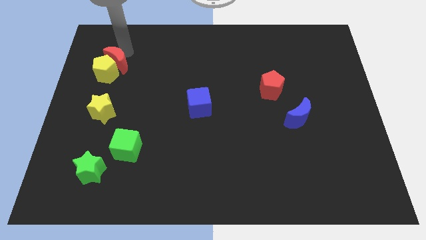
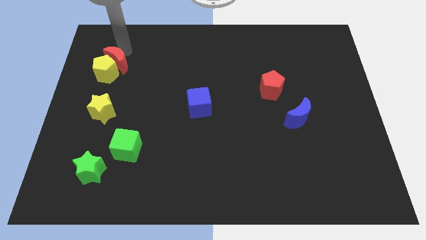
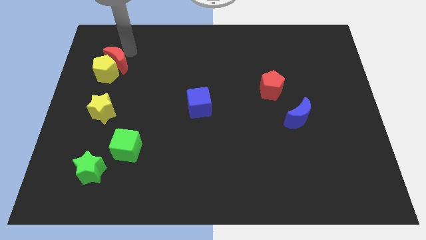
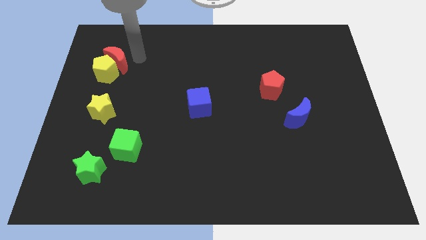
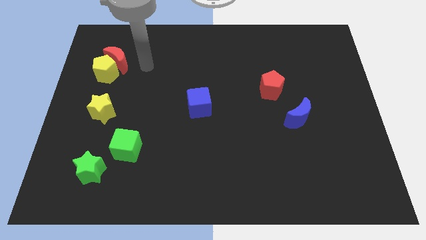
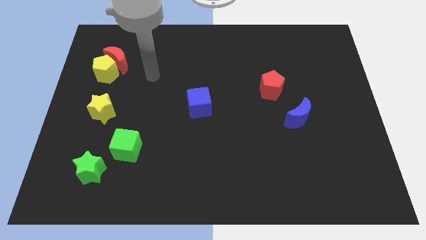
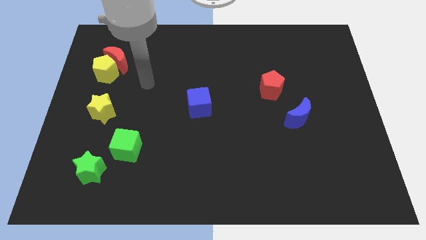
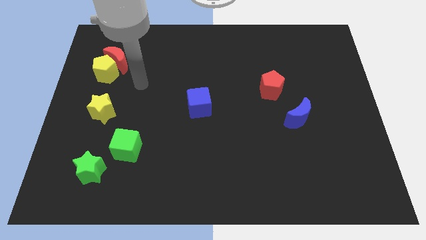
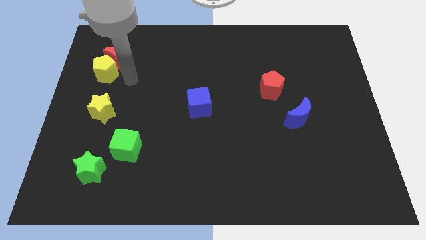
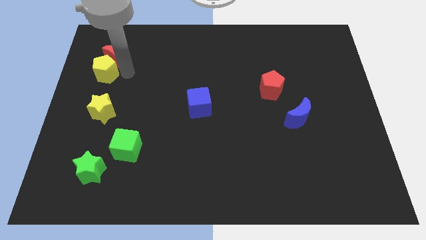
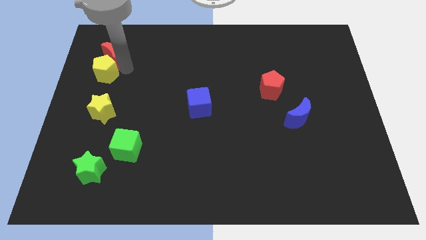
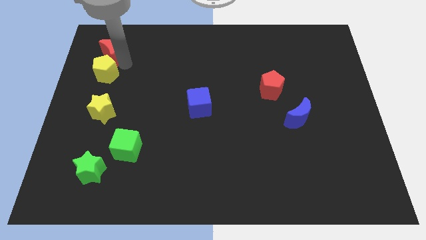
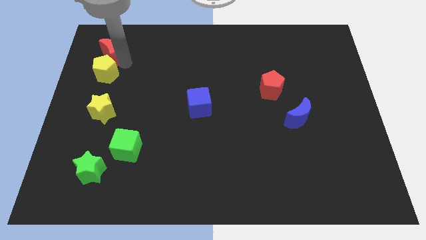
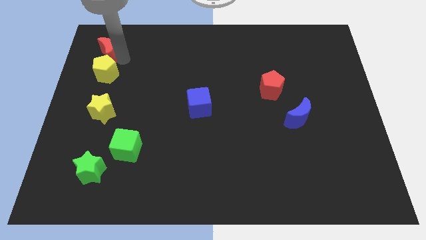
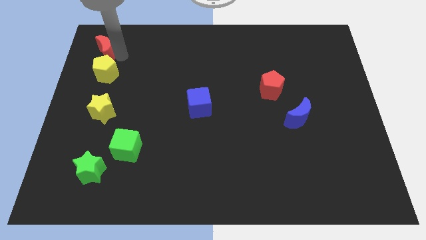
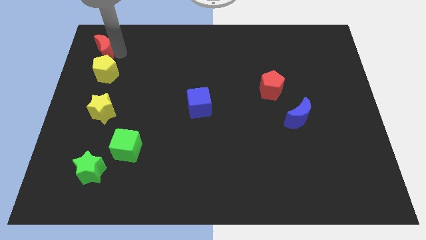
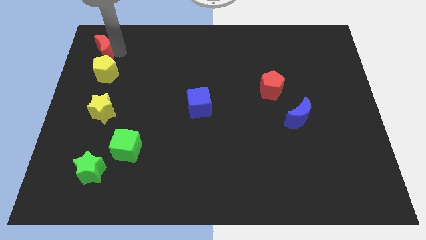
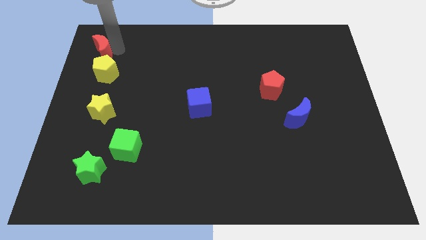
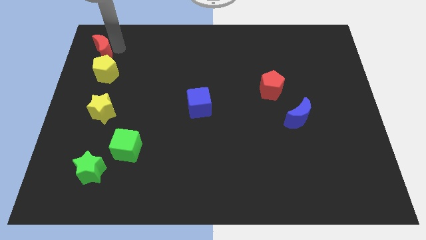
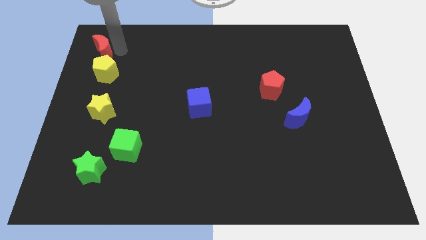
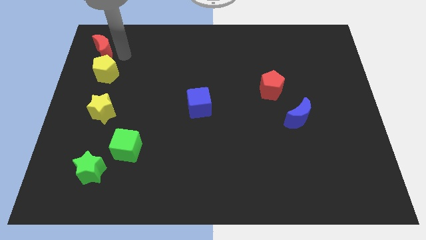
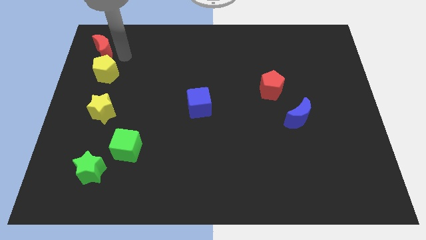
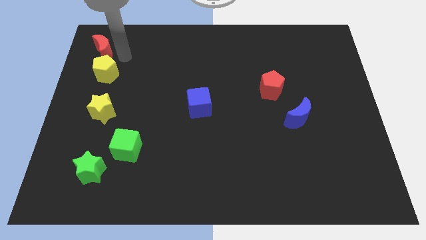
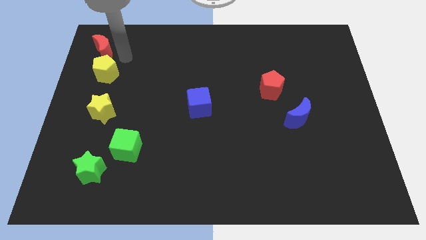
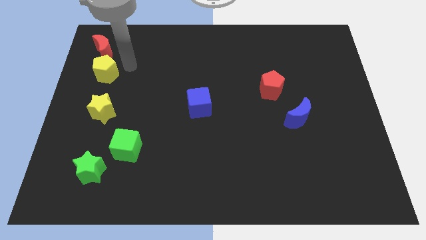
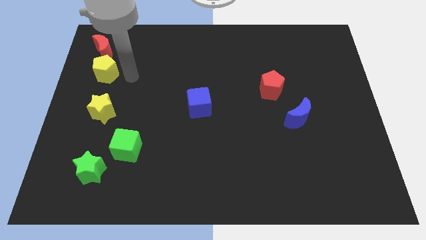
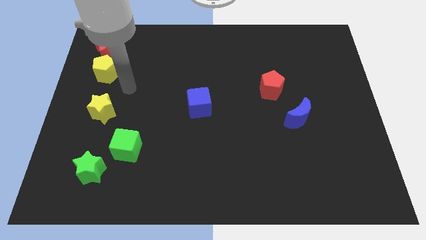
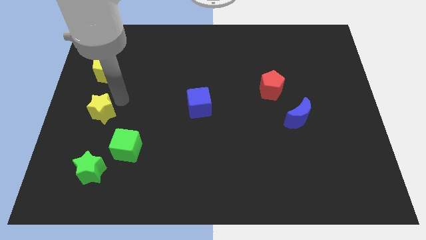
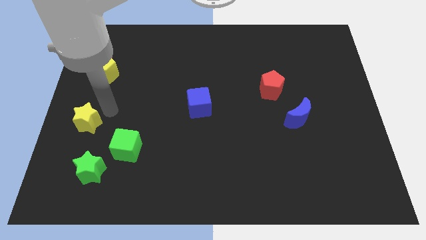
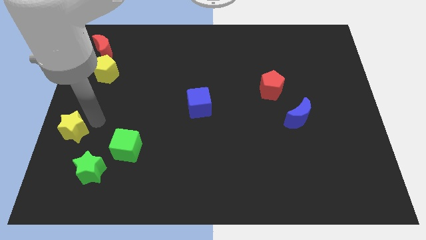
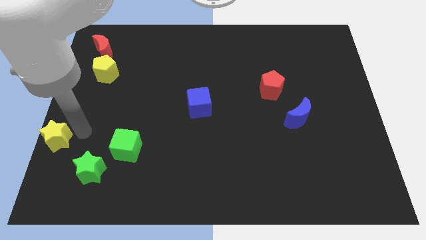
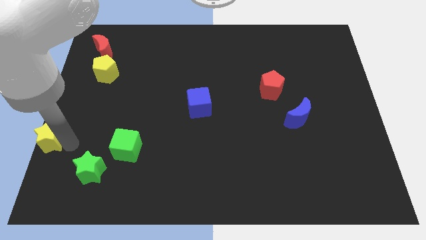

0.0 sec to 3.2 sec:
push the red moon and yellow star to the left side of the board

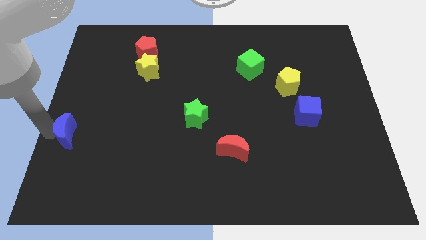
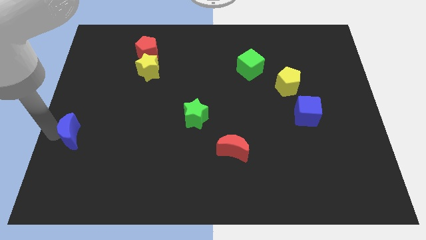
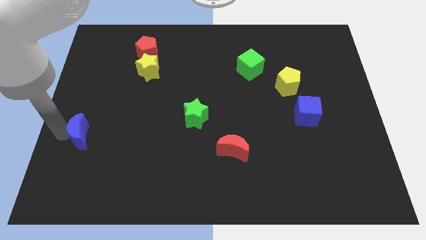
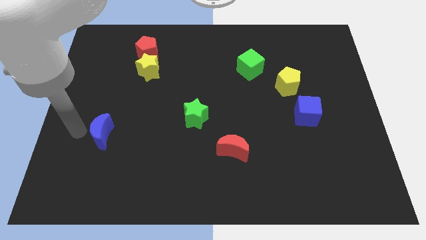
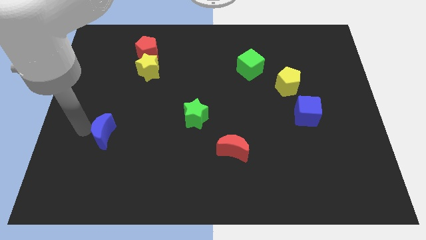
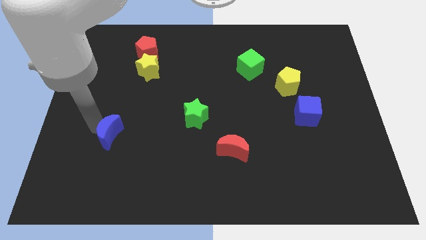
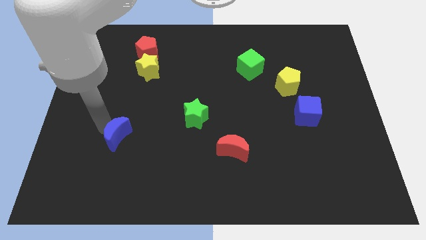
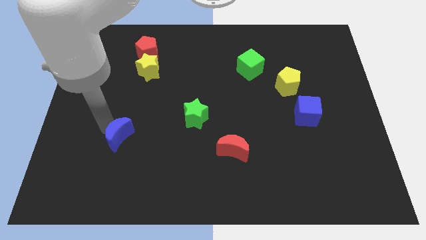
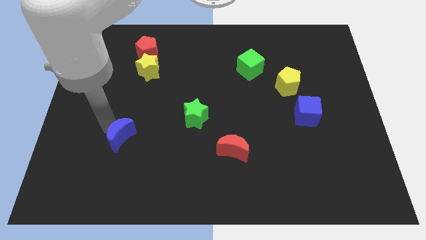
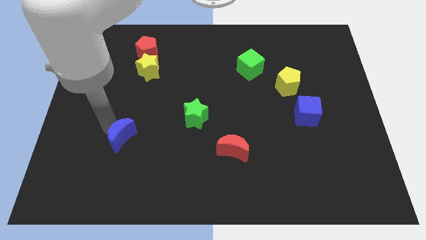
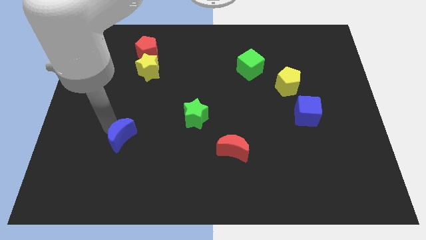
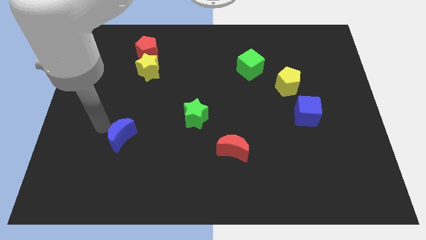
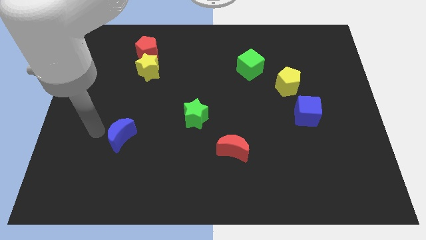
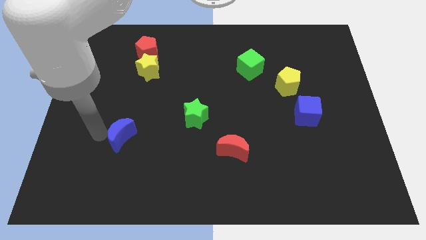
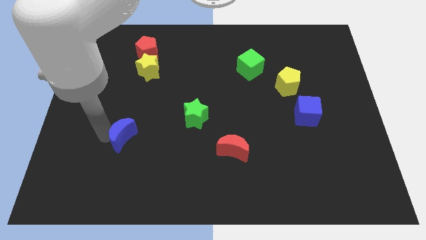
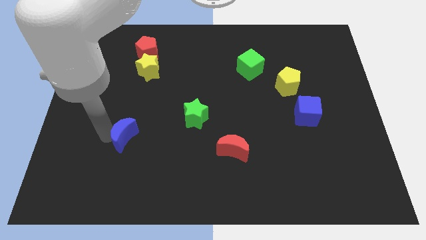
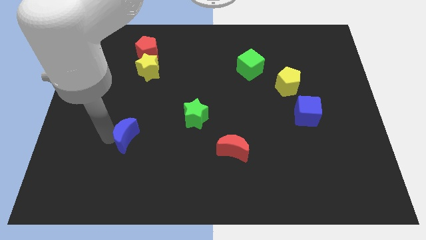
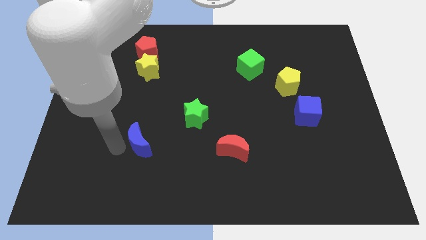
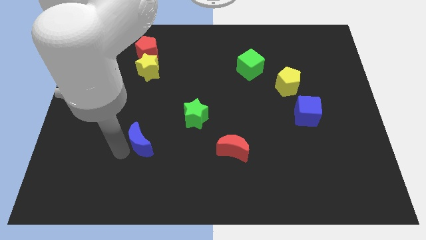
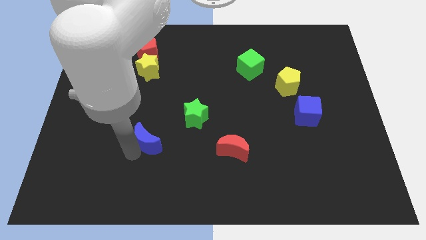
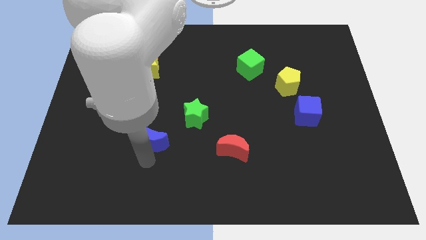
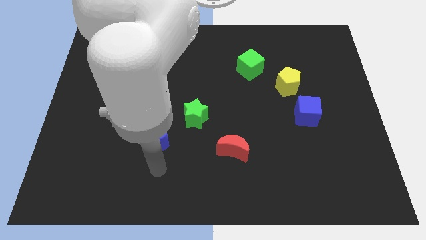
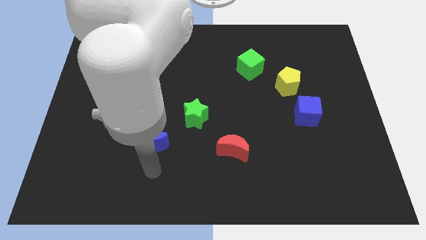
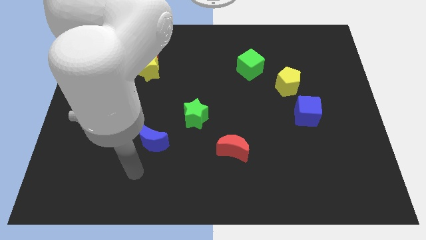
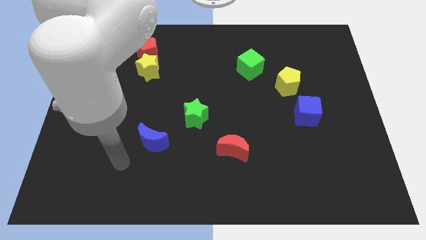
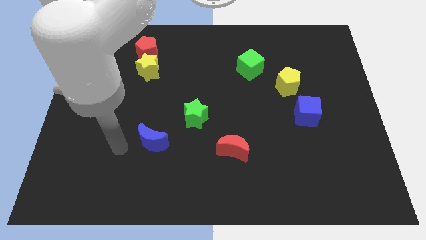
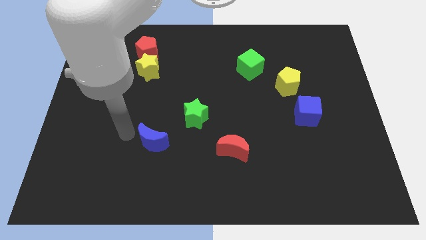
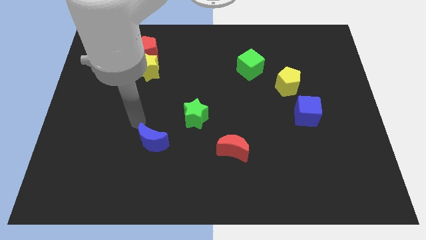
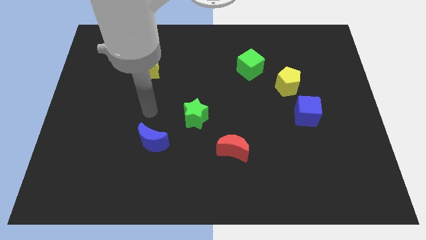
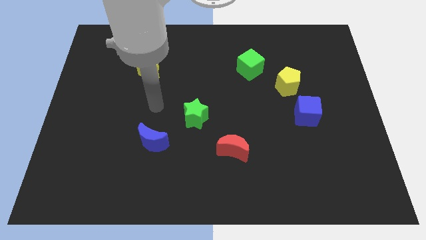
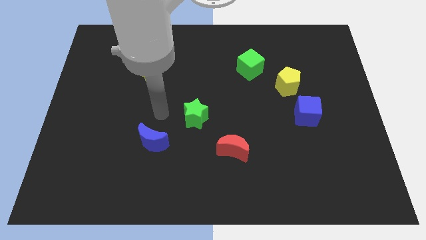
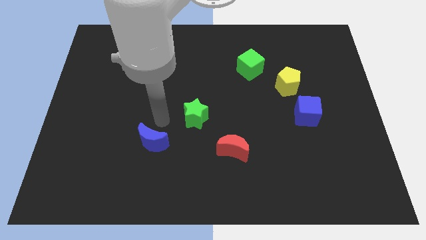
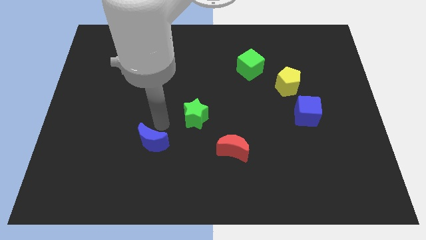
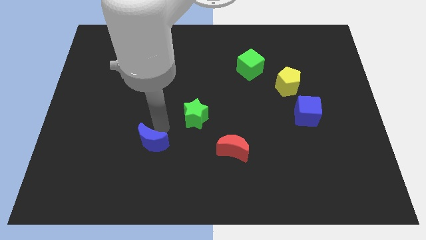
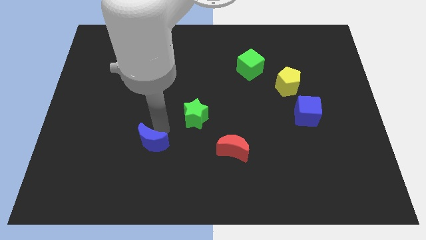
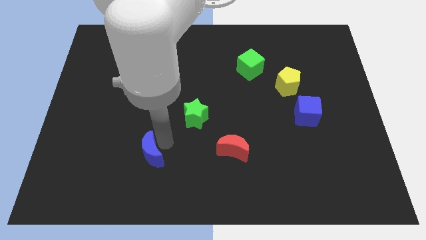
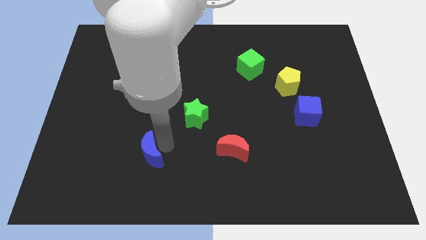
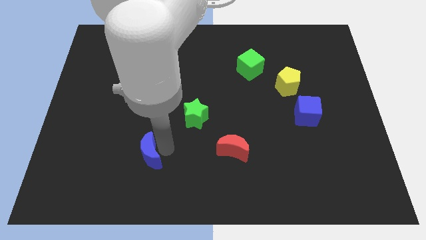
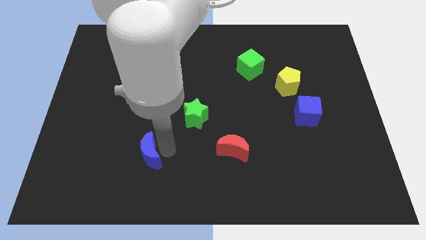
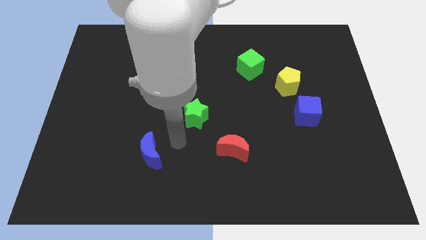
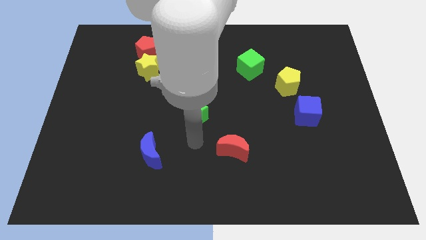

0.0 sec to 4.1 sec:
push the blue crescent to the bottom left of the green star

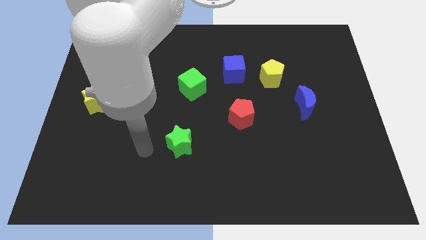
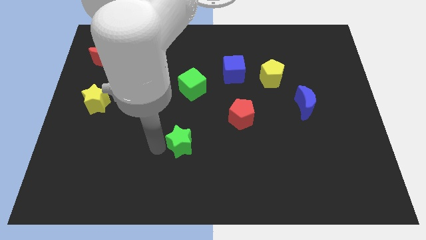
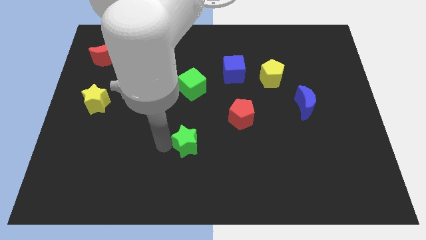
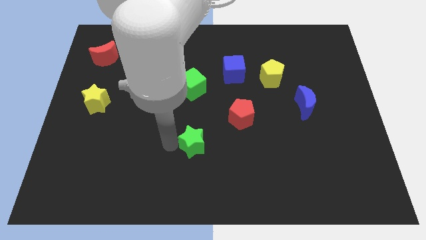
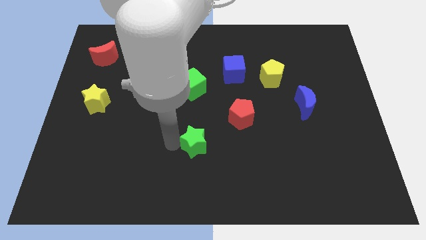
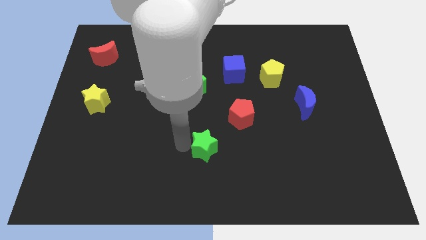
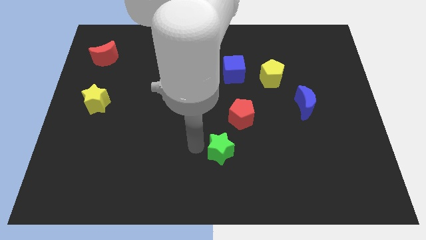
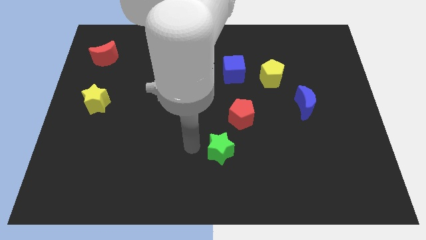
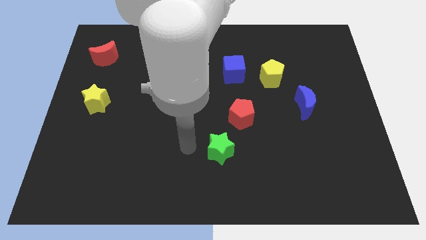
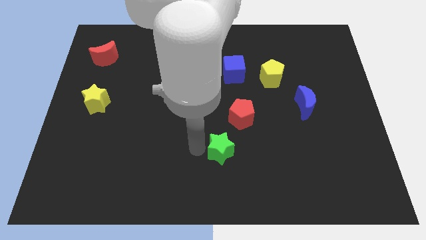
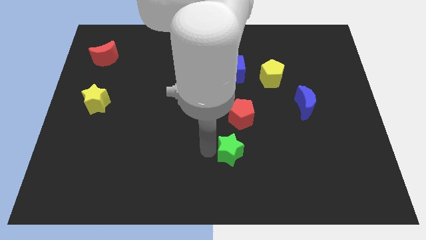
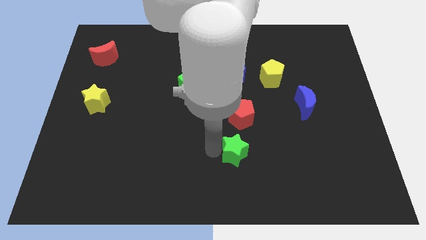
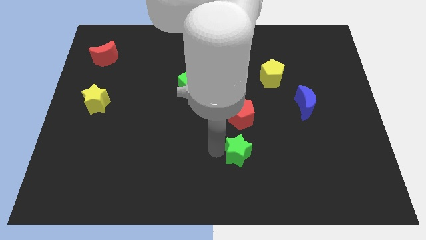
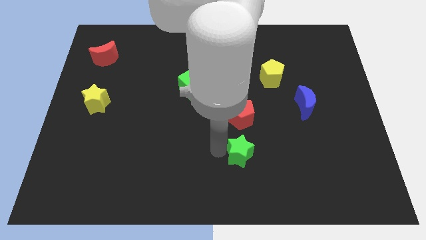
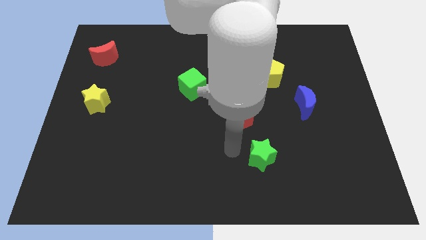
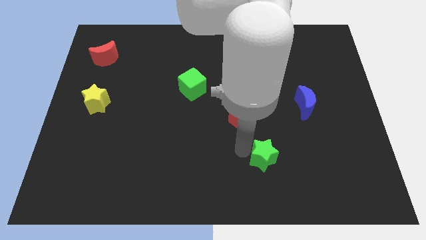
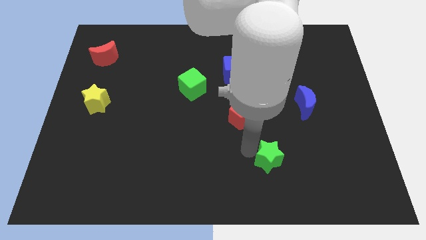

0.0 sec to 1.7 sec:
push the green star towards the right side of the board
